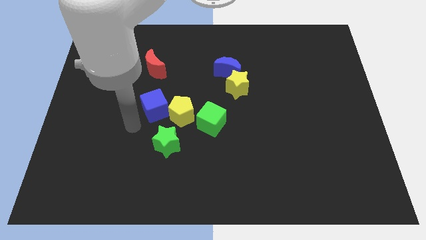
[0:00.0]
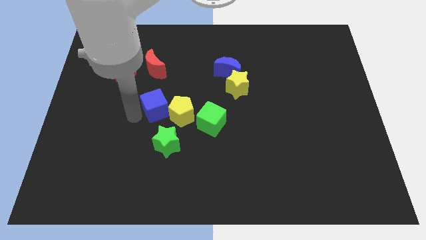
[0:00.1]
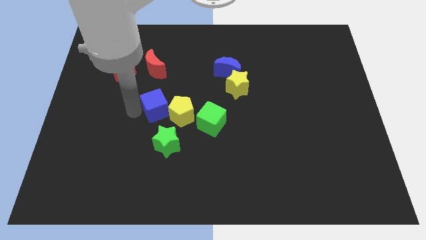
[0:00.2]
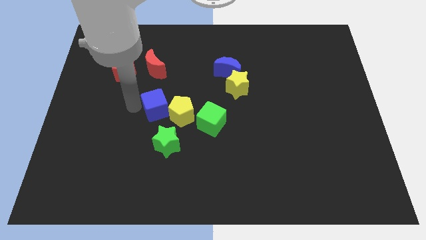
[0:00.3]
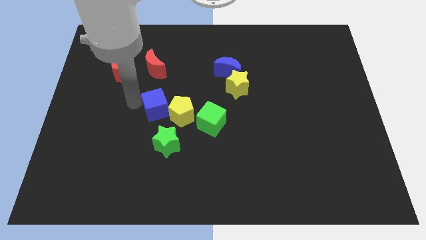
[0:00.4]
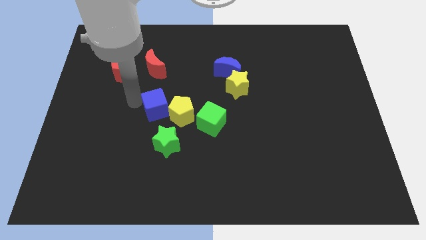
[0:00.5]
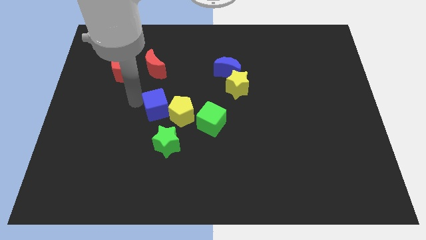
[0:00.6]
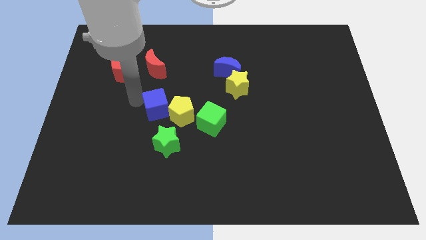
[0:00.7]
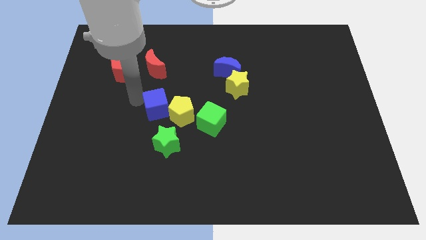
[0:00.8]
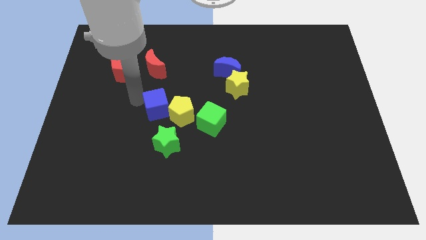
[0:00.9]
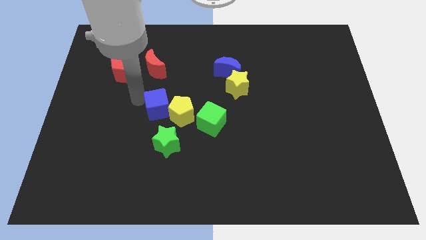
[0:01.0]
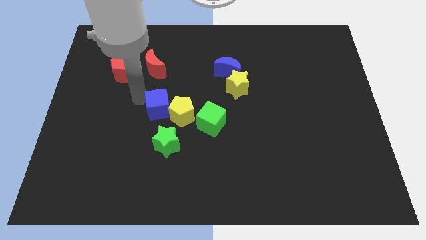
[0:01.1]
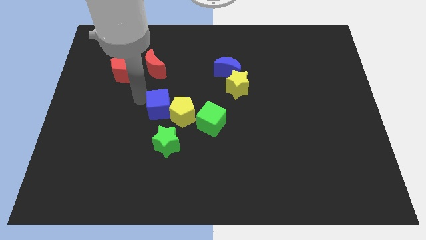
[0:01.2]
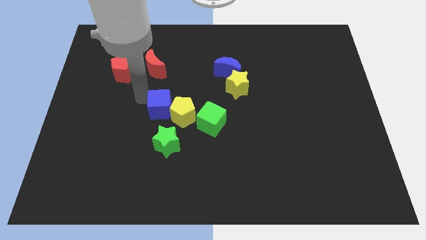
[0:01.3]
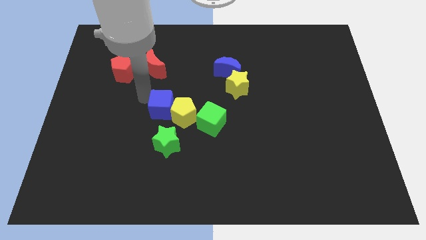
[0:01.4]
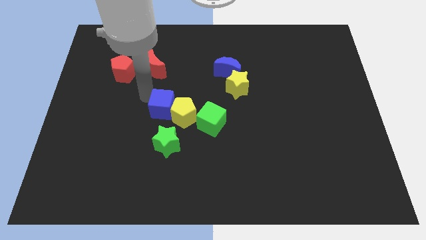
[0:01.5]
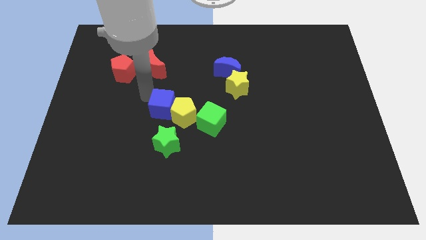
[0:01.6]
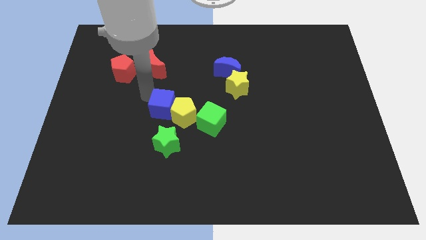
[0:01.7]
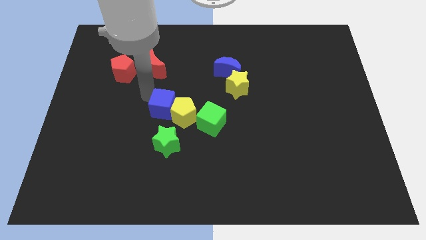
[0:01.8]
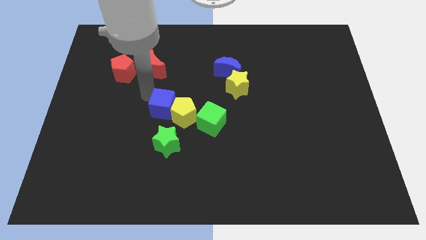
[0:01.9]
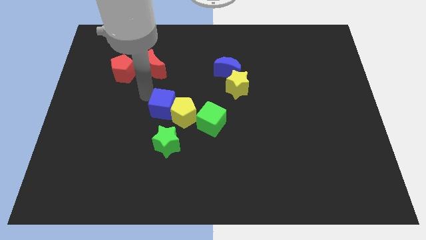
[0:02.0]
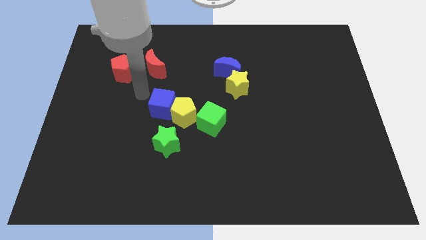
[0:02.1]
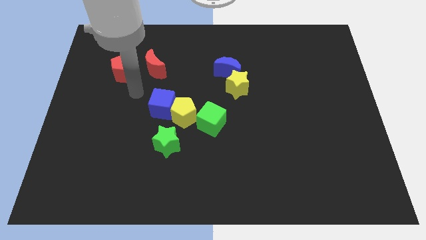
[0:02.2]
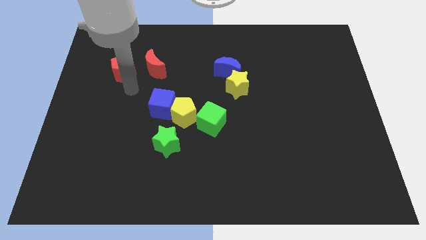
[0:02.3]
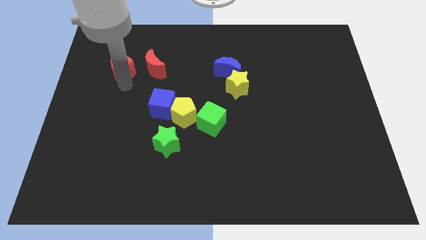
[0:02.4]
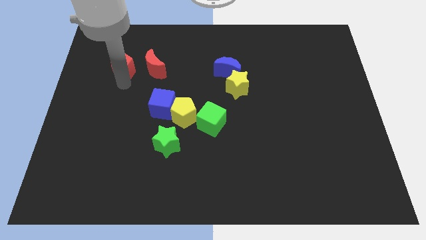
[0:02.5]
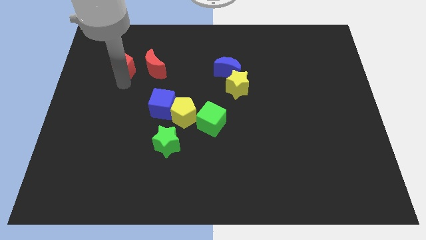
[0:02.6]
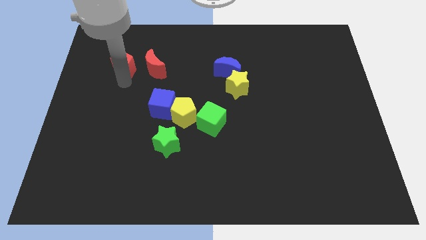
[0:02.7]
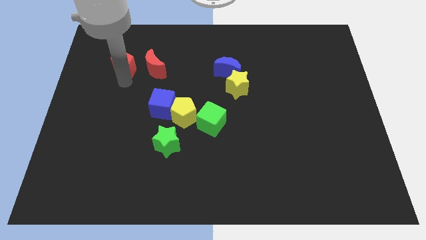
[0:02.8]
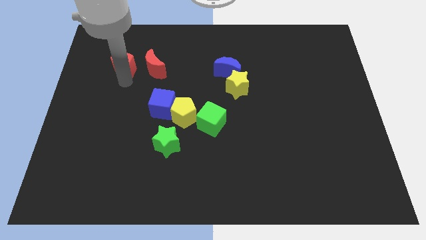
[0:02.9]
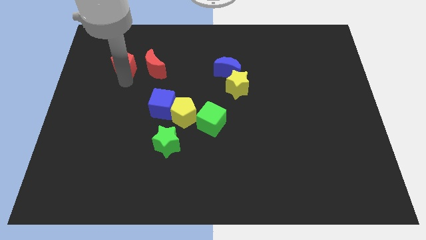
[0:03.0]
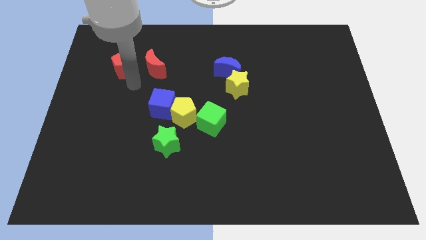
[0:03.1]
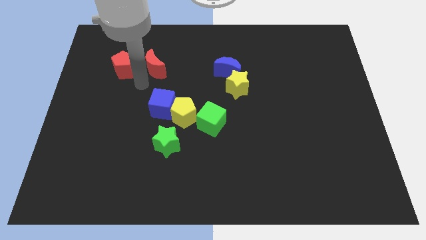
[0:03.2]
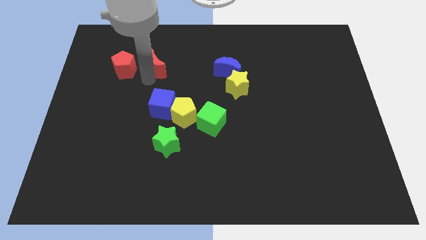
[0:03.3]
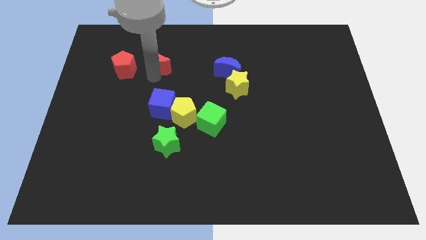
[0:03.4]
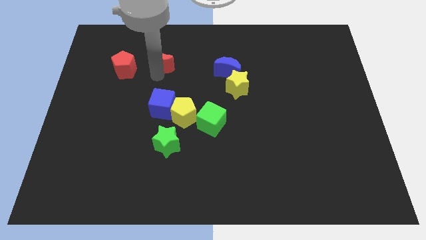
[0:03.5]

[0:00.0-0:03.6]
push the blue cube into the yellow pentagon

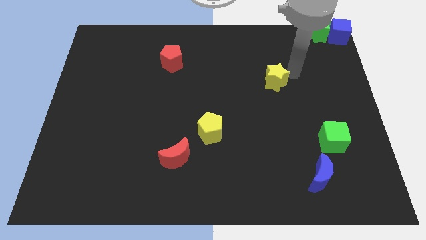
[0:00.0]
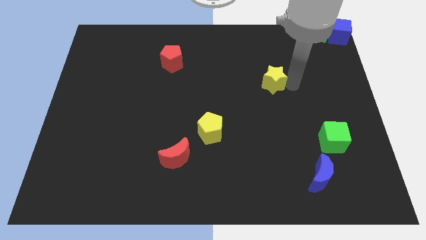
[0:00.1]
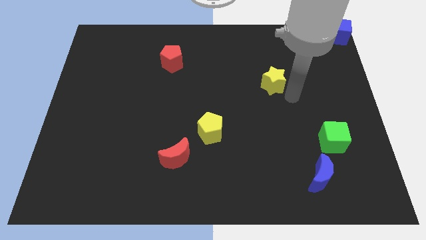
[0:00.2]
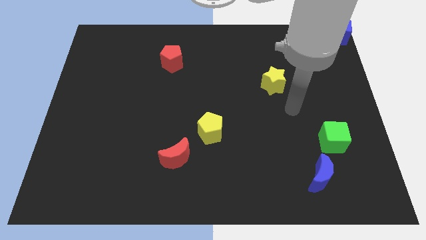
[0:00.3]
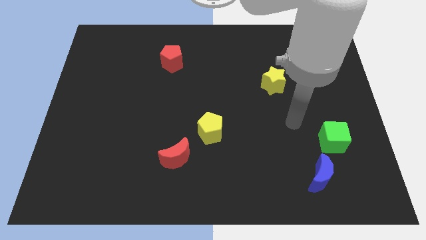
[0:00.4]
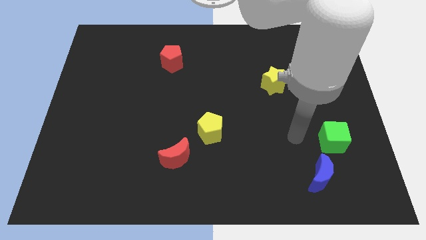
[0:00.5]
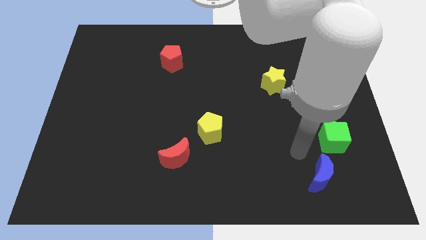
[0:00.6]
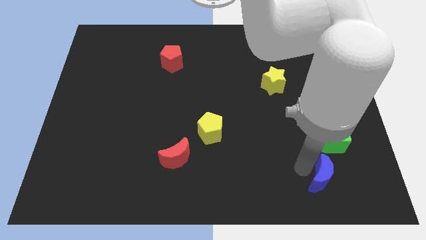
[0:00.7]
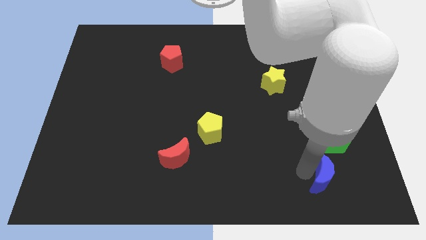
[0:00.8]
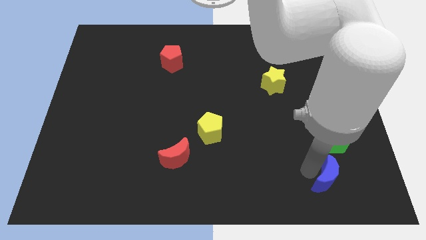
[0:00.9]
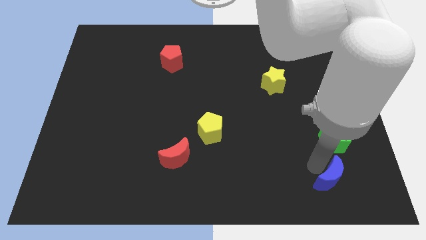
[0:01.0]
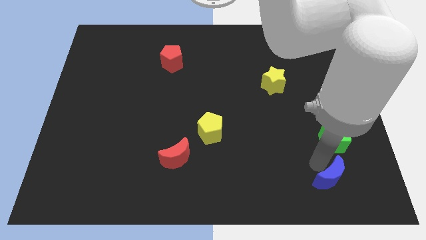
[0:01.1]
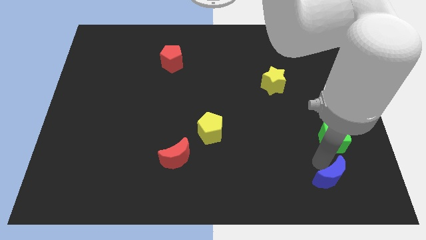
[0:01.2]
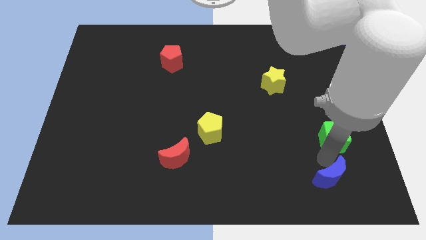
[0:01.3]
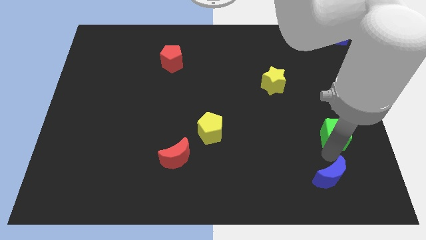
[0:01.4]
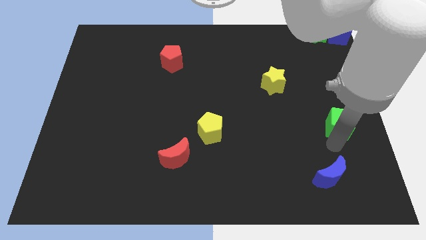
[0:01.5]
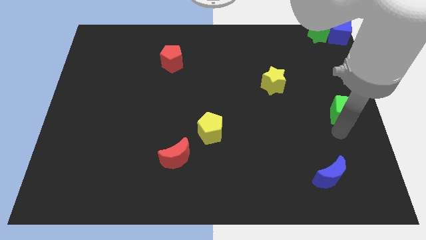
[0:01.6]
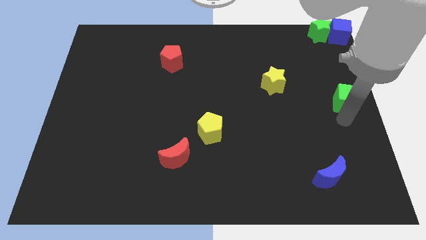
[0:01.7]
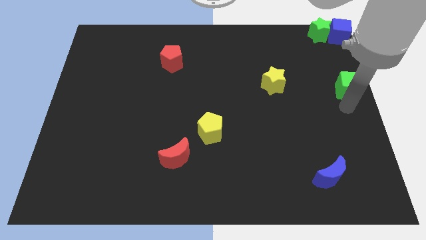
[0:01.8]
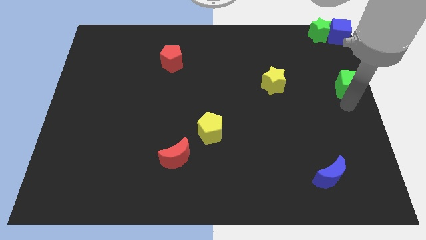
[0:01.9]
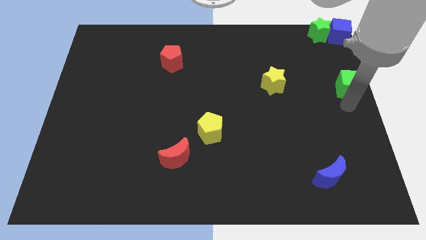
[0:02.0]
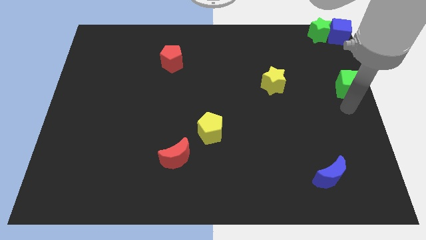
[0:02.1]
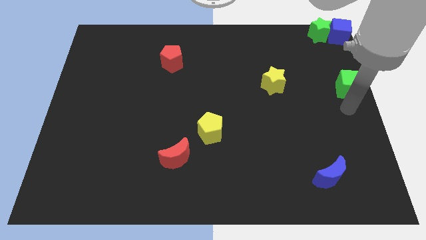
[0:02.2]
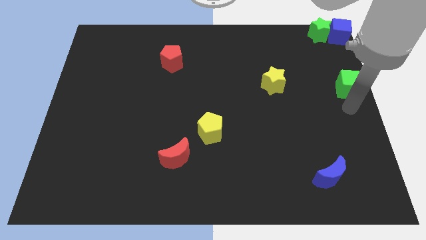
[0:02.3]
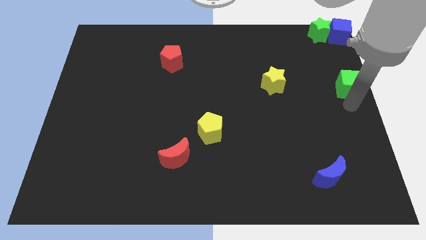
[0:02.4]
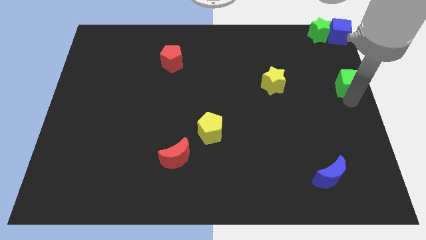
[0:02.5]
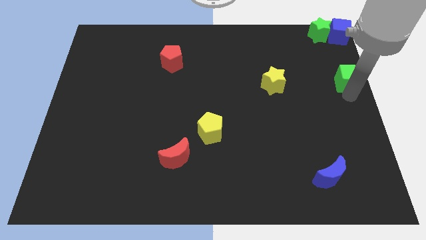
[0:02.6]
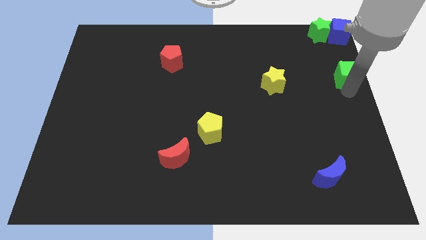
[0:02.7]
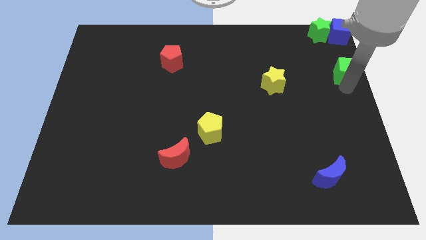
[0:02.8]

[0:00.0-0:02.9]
move your arm towards green block

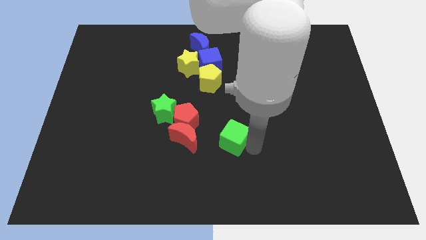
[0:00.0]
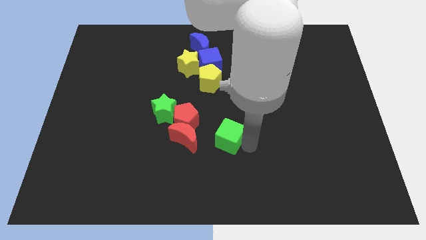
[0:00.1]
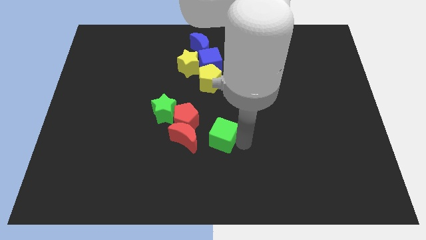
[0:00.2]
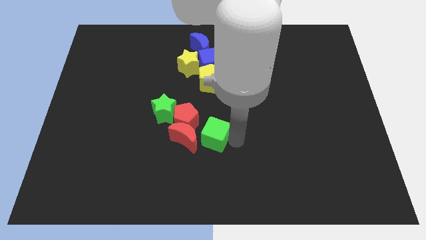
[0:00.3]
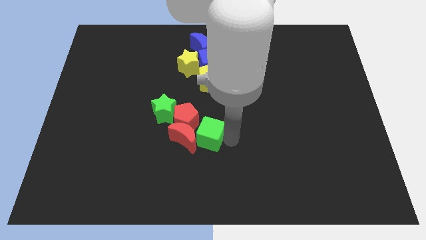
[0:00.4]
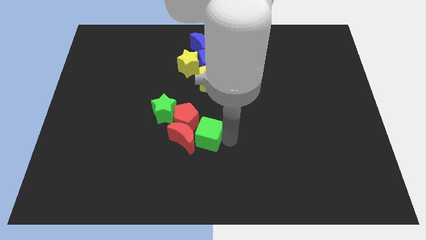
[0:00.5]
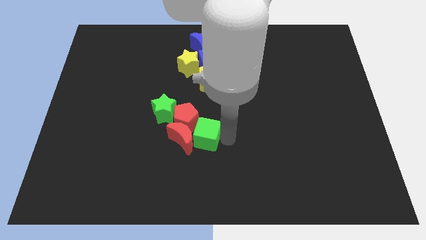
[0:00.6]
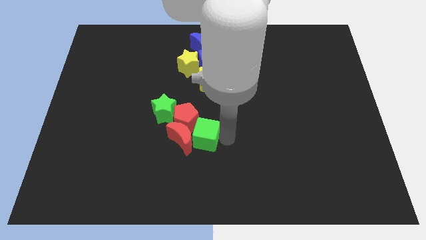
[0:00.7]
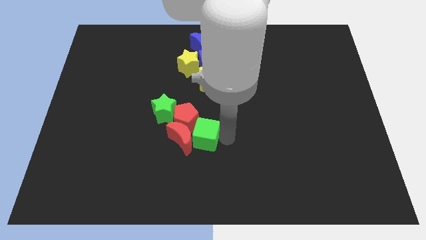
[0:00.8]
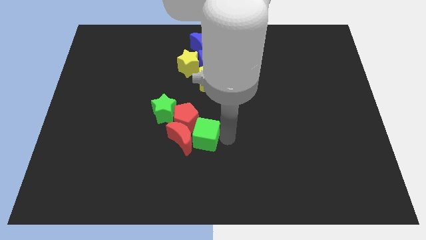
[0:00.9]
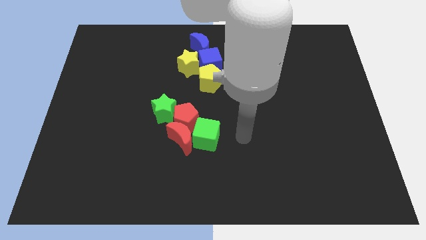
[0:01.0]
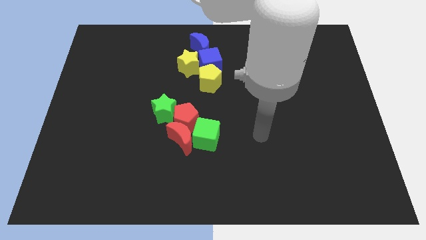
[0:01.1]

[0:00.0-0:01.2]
push the green cube closer to the red pentagon and red moon

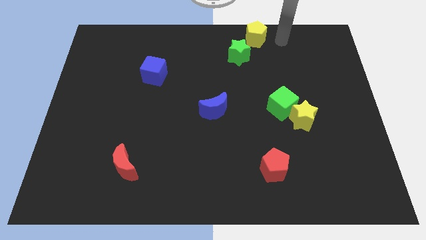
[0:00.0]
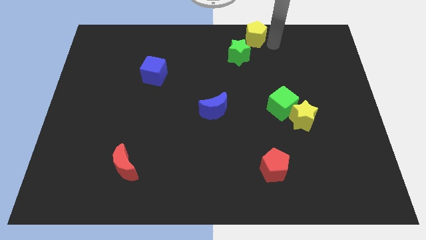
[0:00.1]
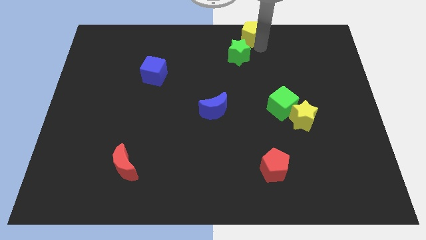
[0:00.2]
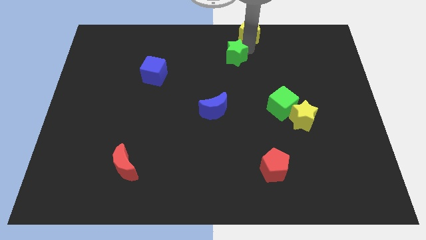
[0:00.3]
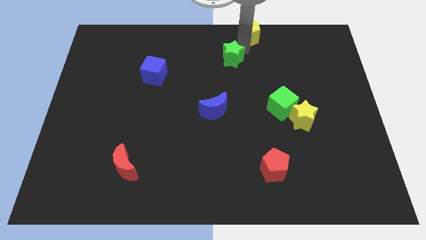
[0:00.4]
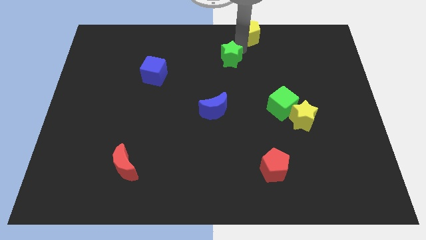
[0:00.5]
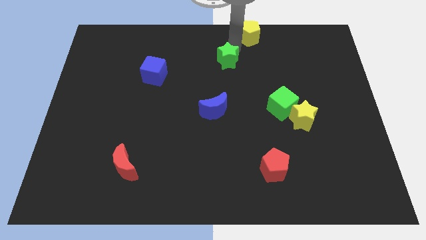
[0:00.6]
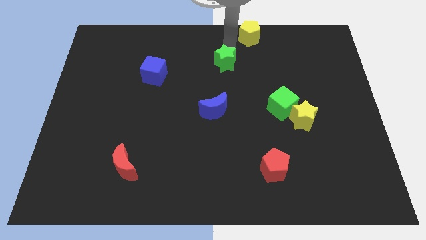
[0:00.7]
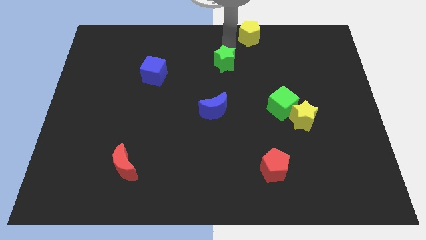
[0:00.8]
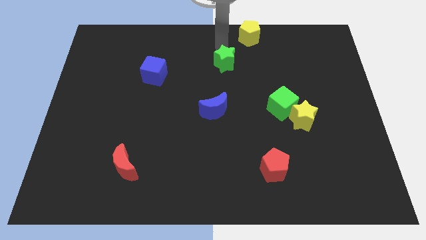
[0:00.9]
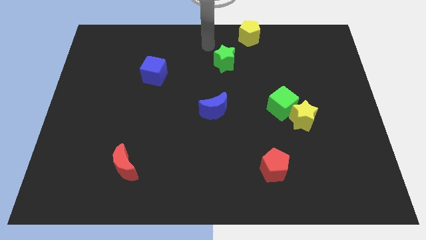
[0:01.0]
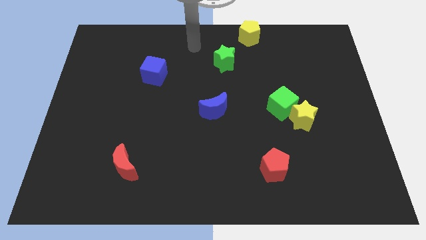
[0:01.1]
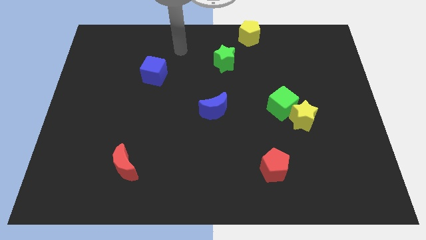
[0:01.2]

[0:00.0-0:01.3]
move the green star downwards slightly

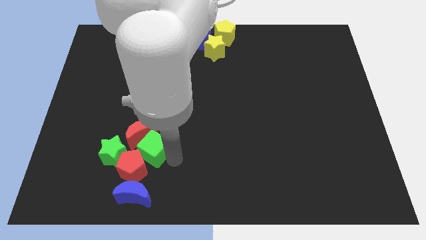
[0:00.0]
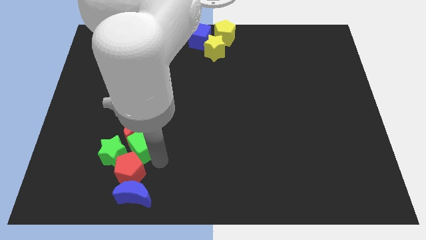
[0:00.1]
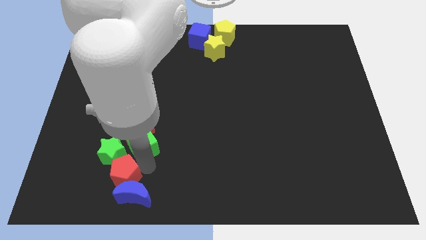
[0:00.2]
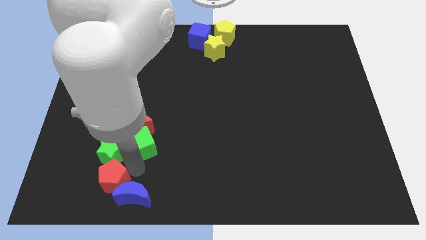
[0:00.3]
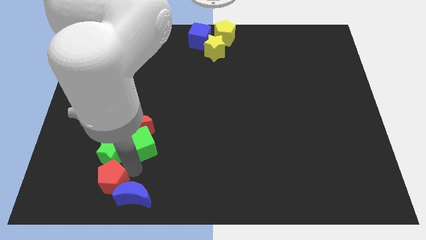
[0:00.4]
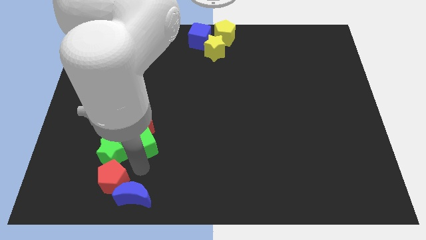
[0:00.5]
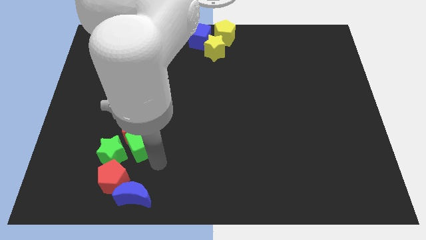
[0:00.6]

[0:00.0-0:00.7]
place red pentagon below green star
